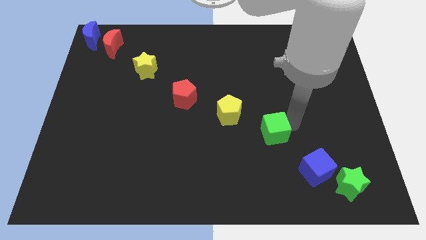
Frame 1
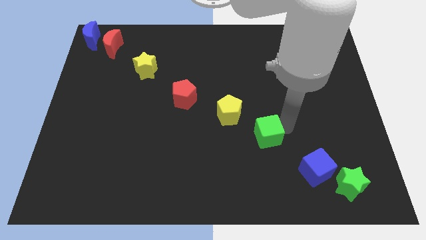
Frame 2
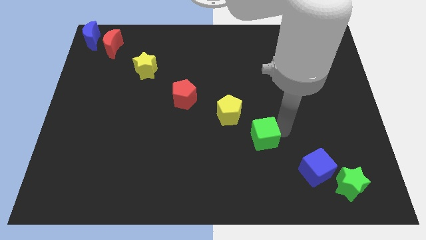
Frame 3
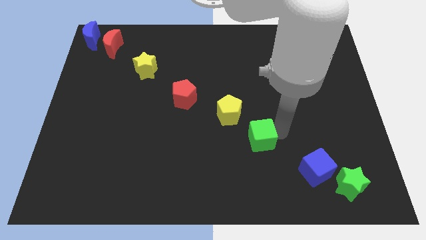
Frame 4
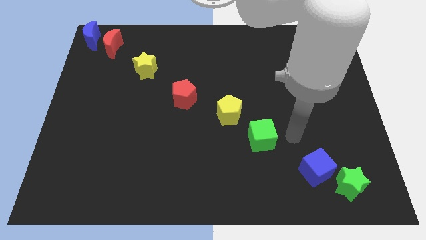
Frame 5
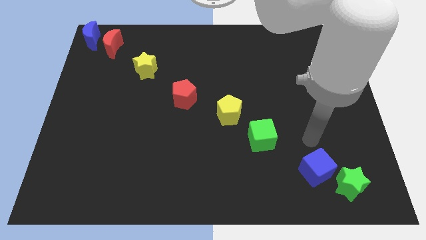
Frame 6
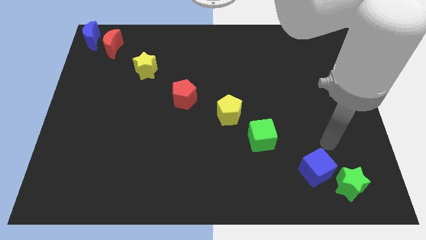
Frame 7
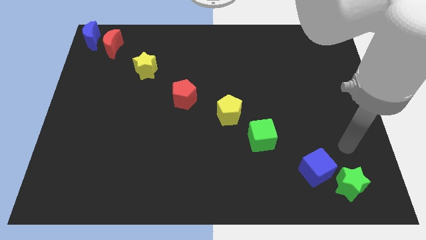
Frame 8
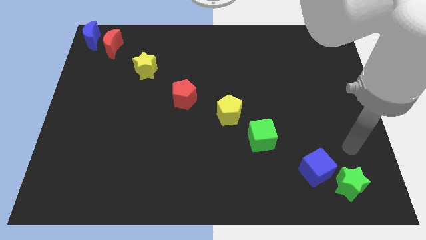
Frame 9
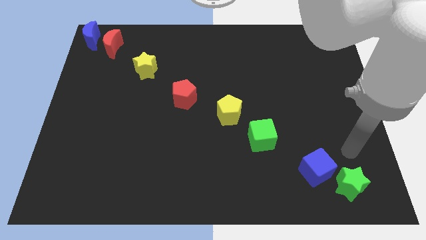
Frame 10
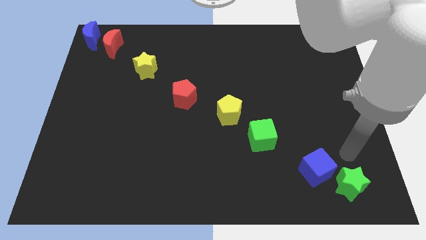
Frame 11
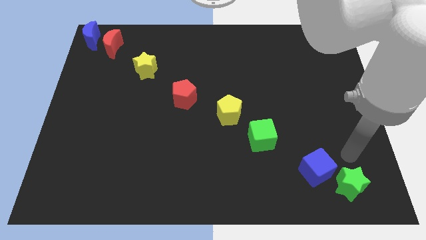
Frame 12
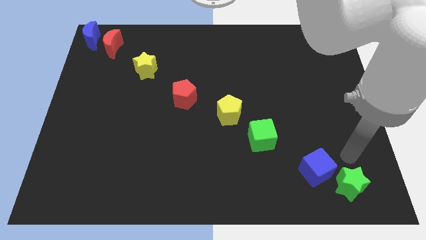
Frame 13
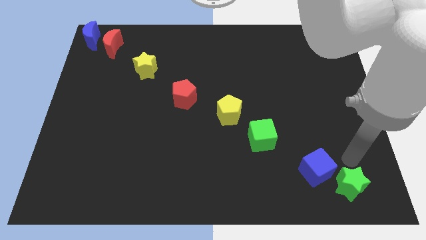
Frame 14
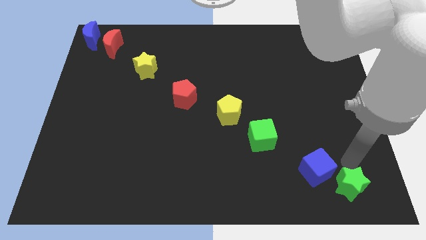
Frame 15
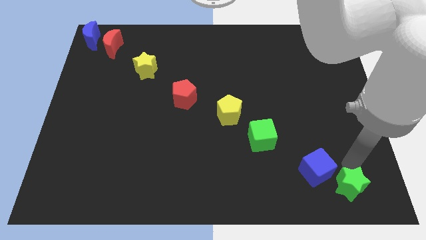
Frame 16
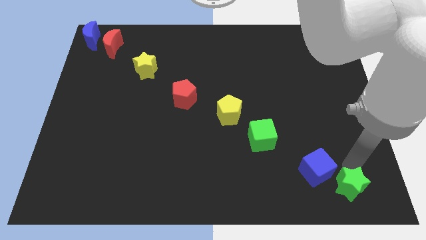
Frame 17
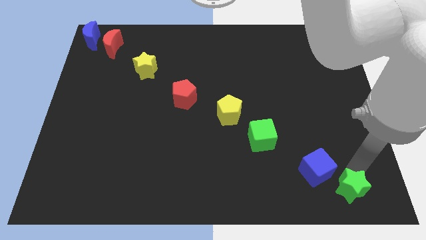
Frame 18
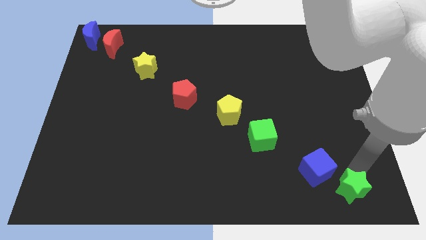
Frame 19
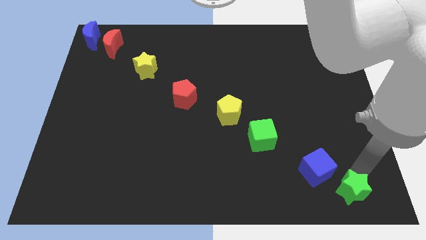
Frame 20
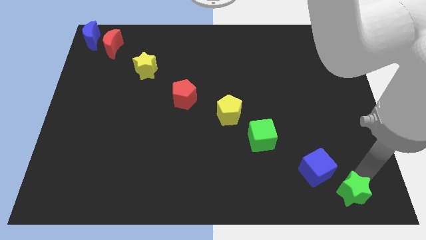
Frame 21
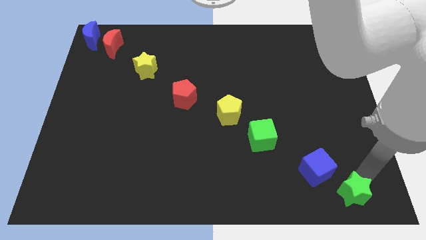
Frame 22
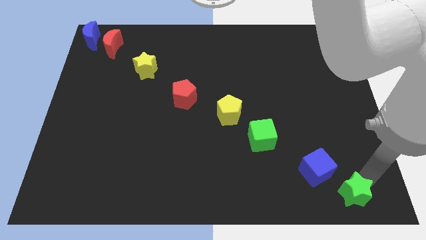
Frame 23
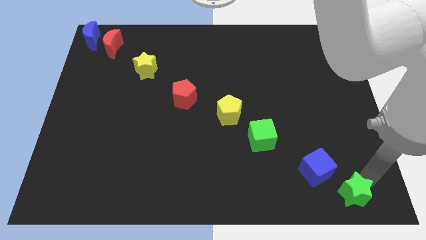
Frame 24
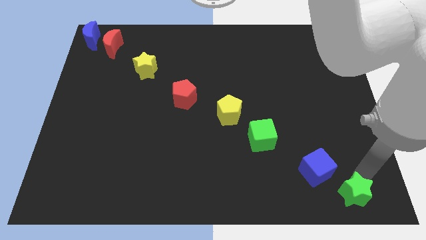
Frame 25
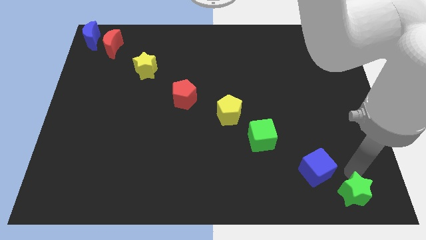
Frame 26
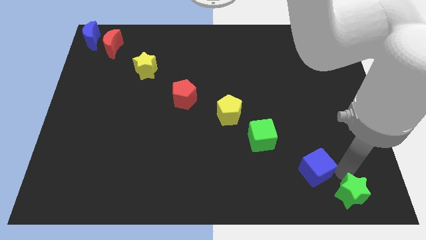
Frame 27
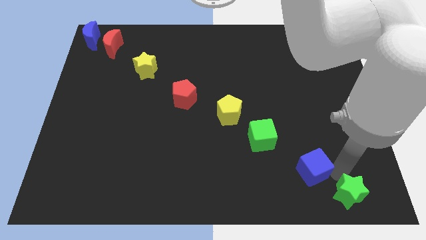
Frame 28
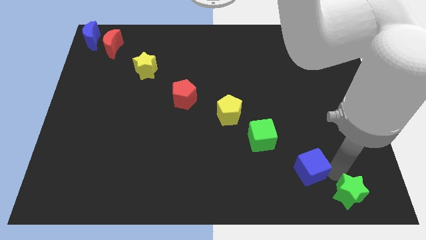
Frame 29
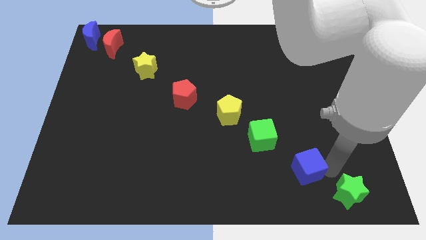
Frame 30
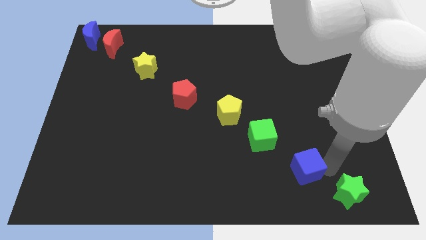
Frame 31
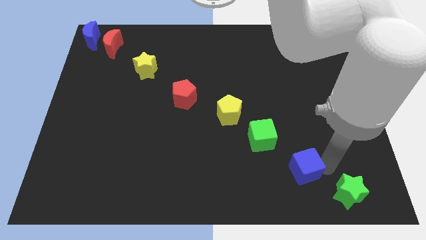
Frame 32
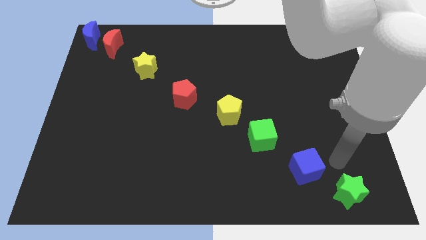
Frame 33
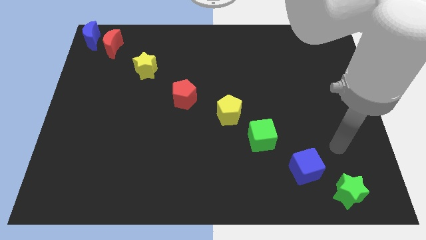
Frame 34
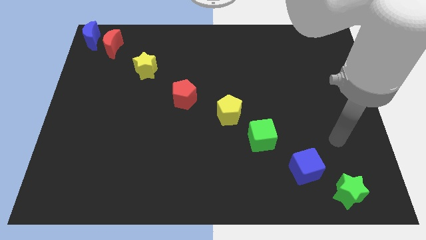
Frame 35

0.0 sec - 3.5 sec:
put the green and blue cubes and green star in a line diagonally

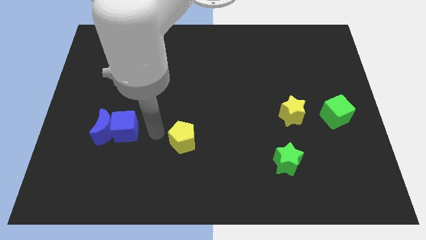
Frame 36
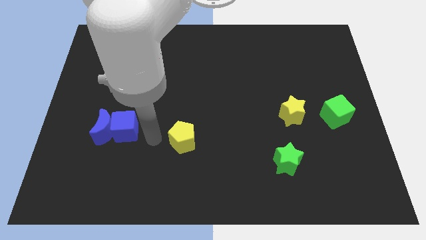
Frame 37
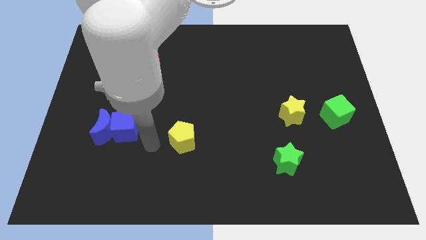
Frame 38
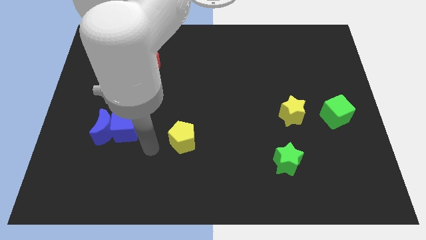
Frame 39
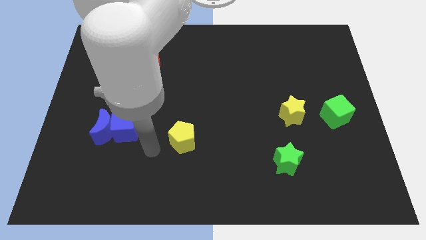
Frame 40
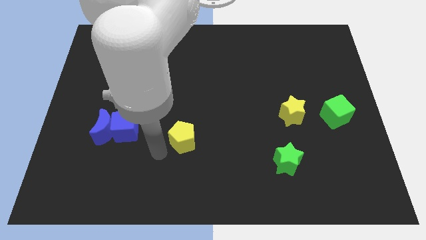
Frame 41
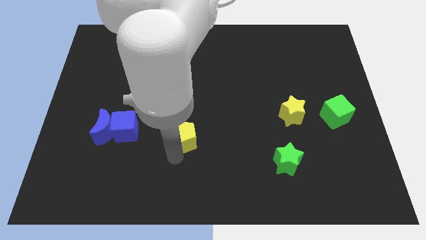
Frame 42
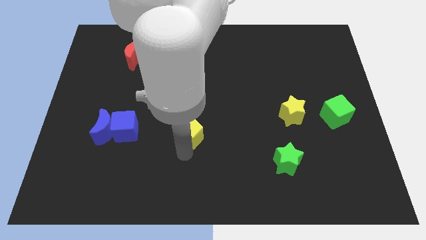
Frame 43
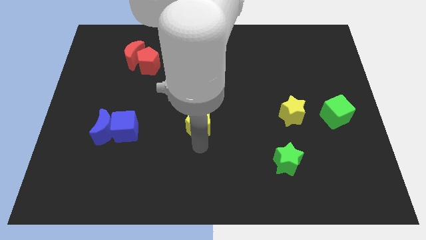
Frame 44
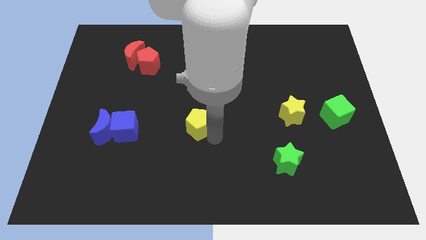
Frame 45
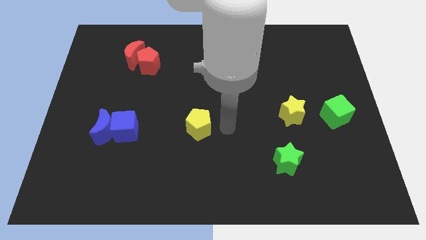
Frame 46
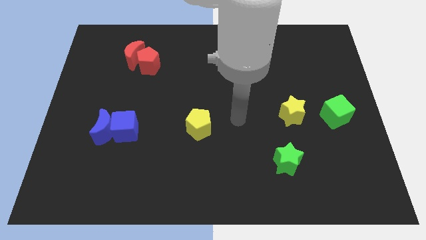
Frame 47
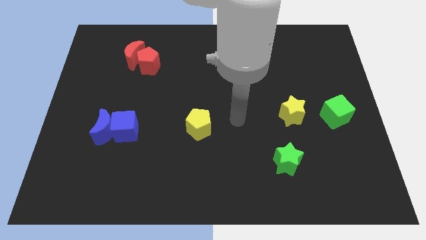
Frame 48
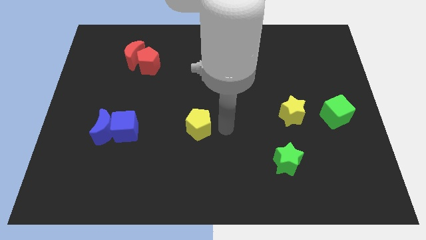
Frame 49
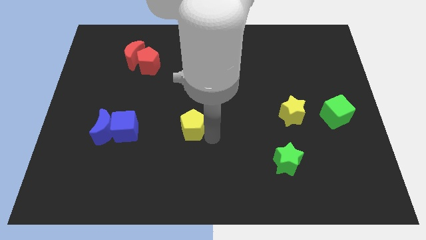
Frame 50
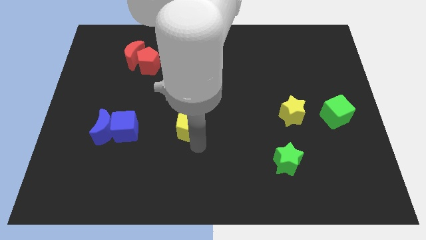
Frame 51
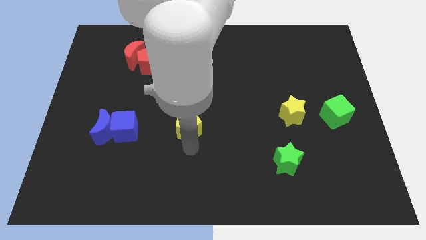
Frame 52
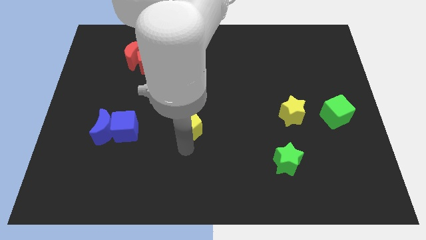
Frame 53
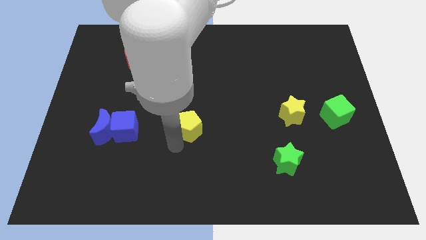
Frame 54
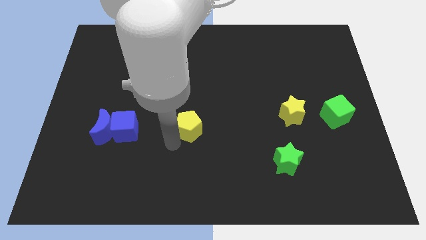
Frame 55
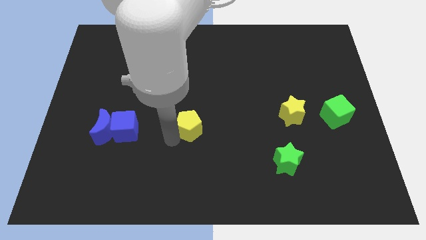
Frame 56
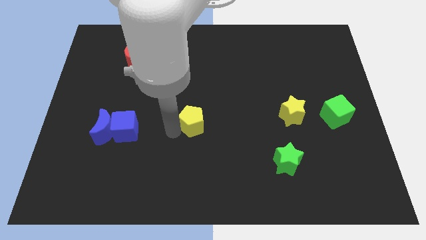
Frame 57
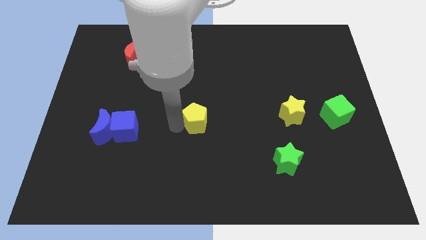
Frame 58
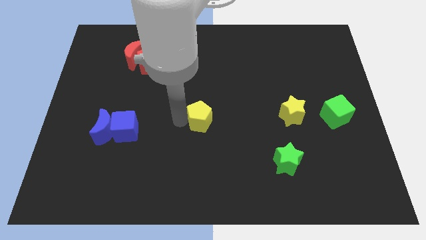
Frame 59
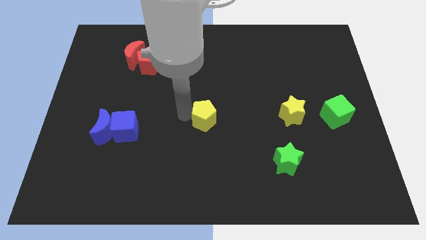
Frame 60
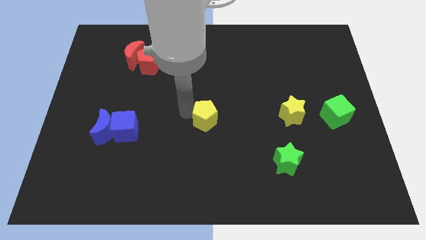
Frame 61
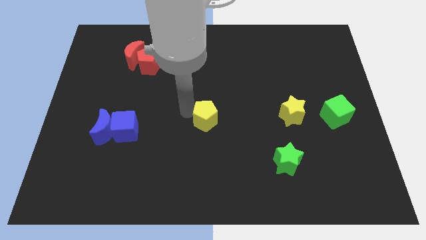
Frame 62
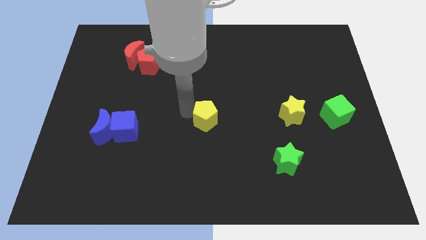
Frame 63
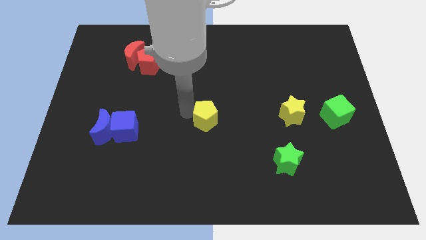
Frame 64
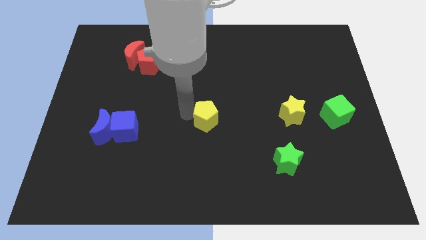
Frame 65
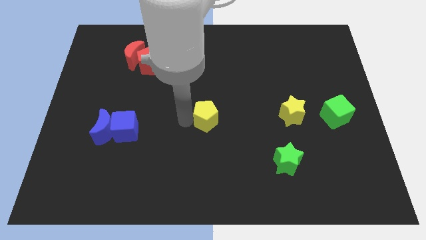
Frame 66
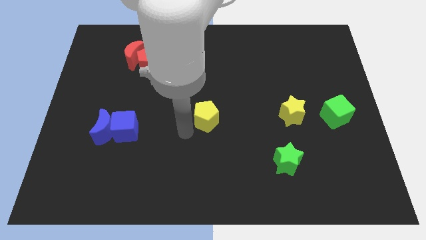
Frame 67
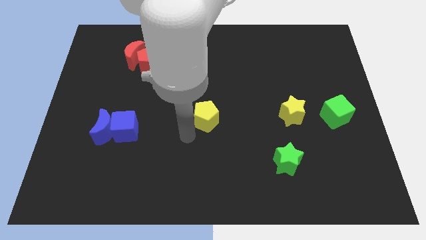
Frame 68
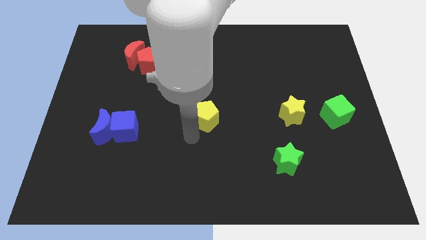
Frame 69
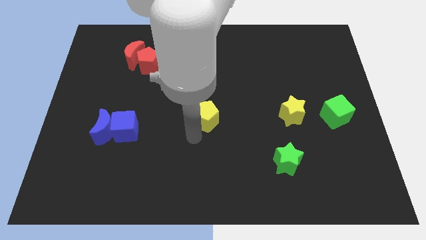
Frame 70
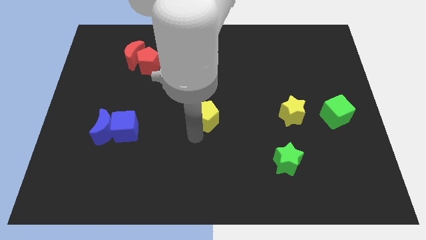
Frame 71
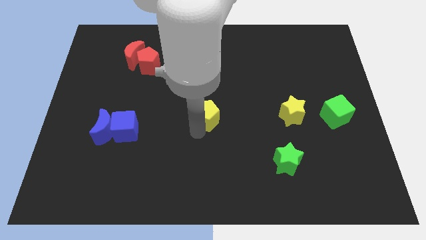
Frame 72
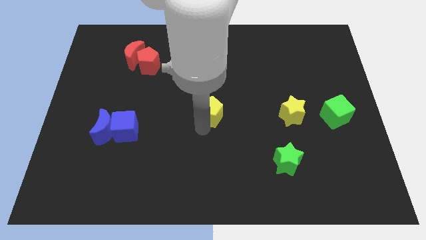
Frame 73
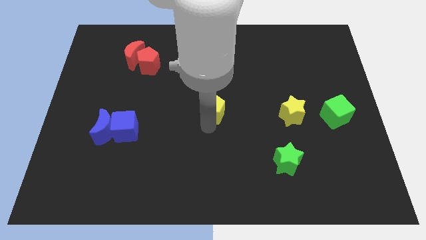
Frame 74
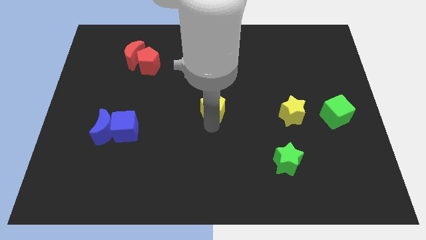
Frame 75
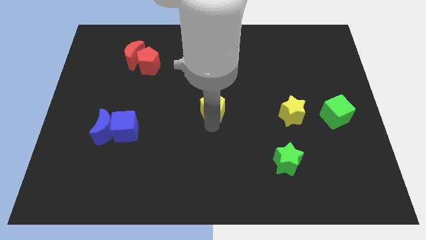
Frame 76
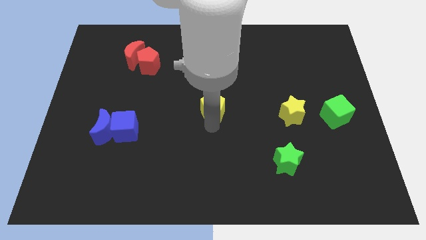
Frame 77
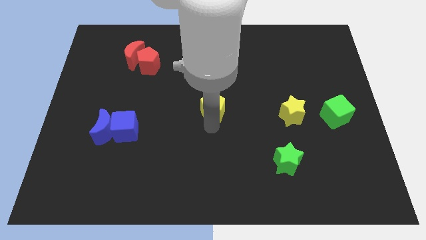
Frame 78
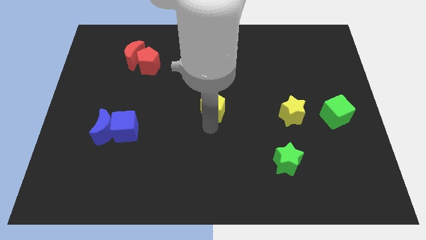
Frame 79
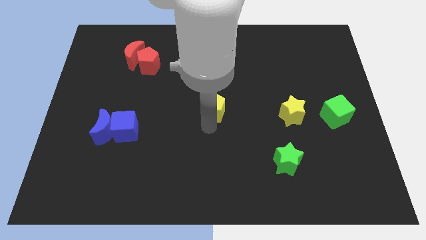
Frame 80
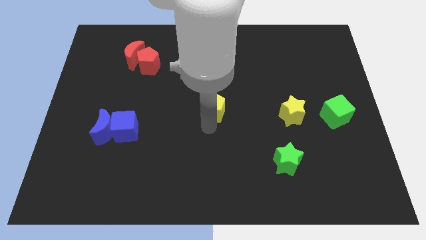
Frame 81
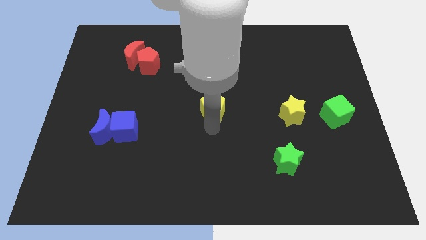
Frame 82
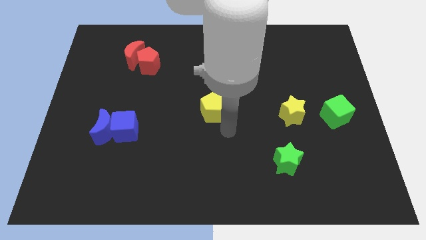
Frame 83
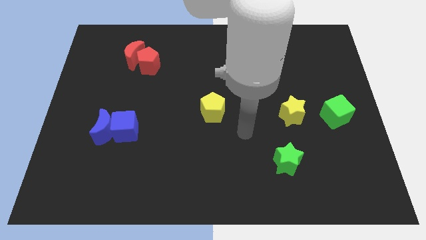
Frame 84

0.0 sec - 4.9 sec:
push the yellow pentagon upward

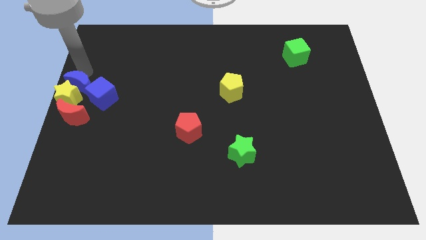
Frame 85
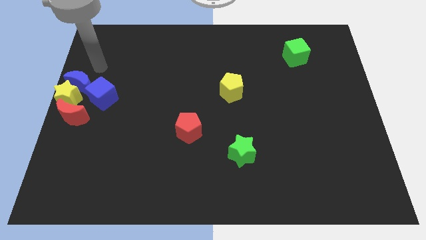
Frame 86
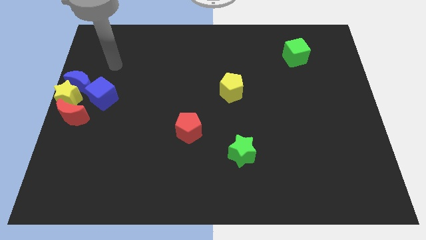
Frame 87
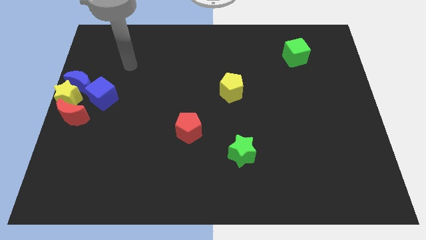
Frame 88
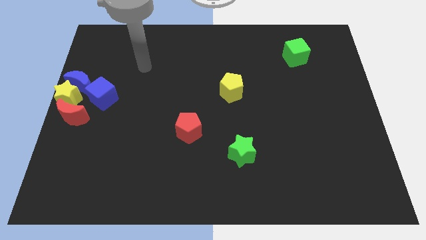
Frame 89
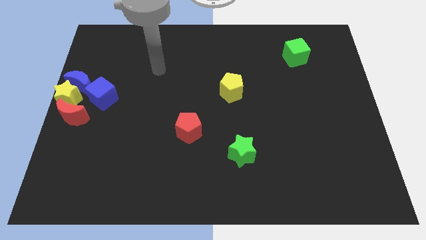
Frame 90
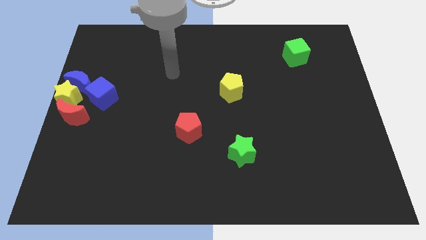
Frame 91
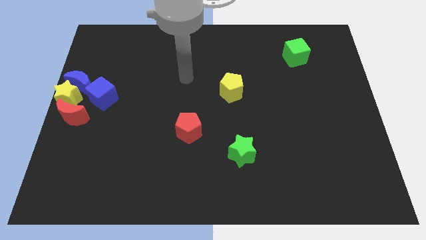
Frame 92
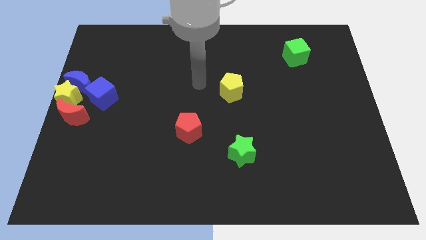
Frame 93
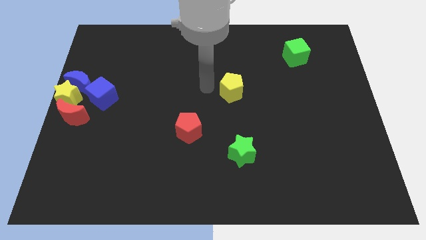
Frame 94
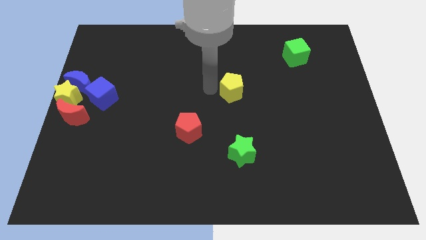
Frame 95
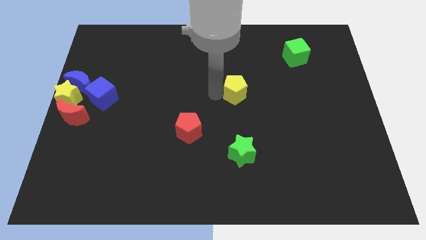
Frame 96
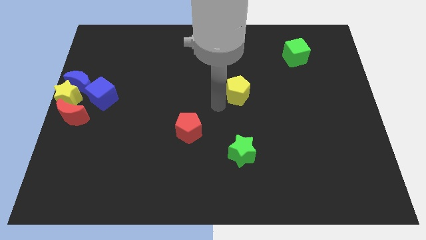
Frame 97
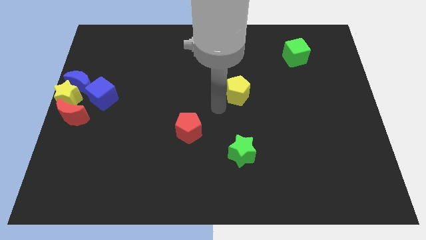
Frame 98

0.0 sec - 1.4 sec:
move the pointer diagonally between red pentagon and yellow pentagon
